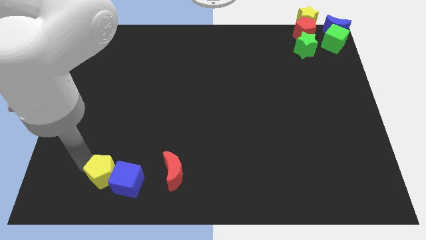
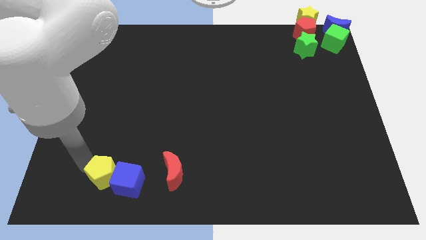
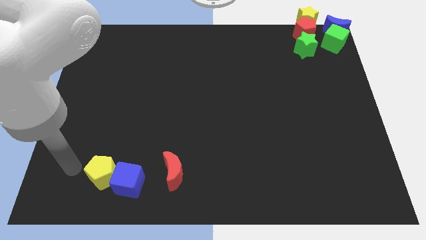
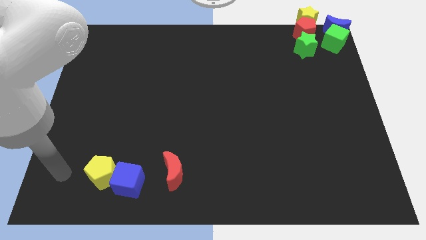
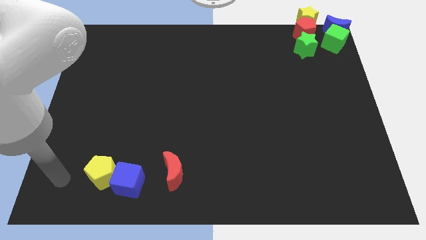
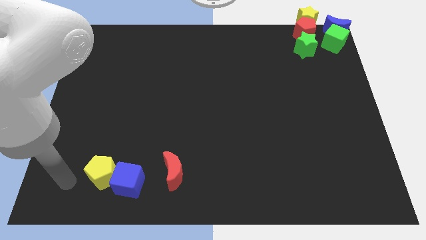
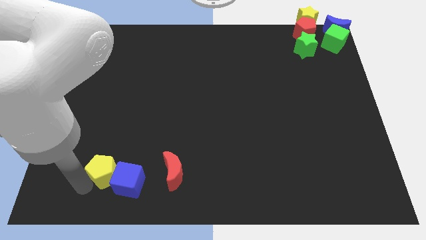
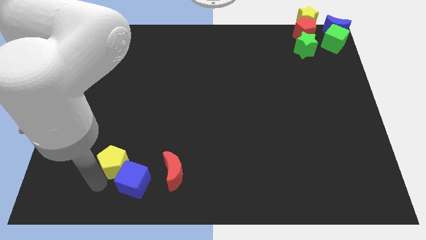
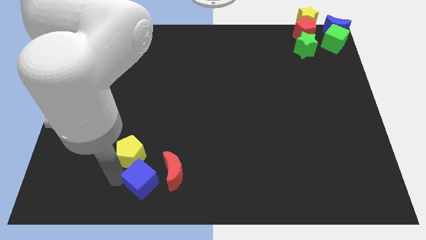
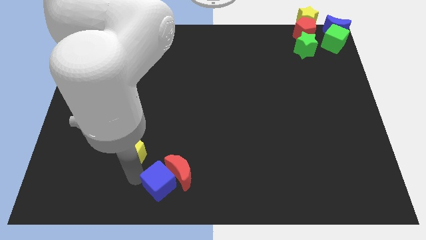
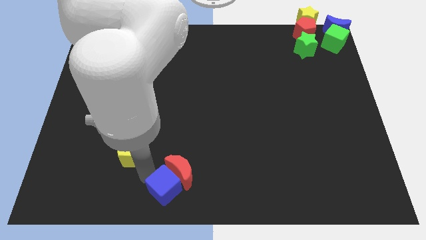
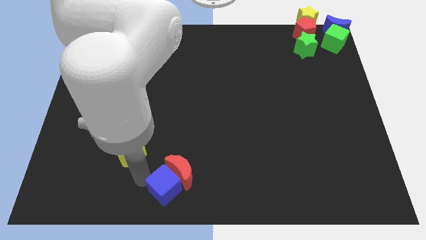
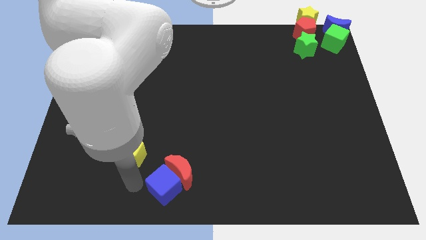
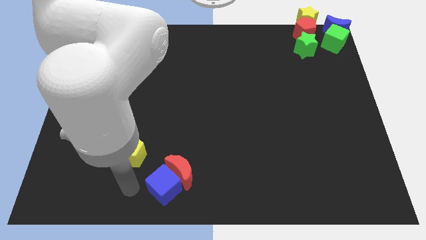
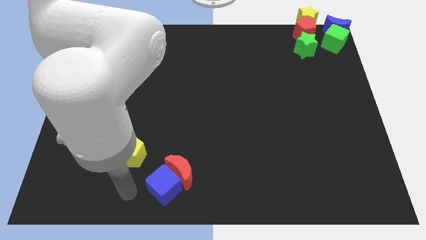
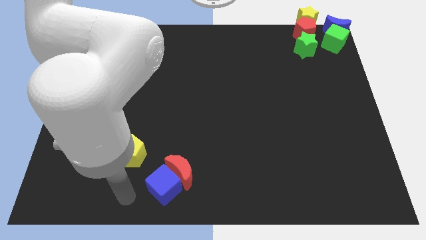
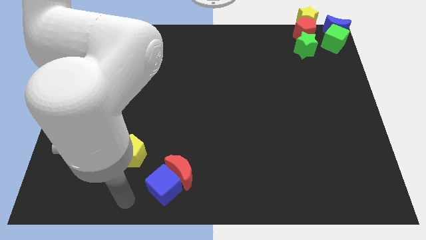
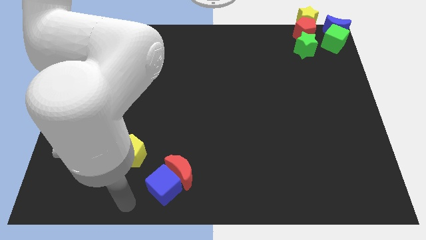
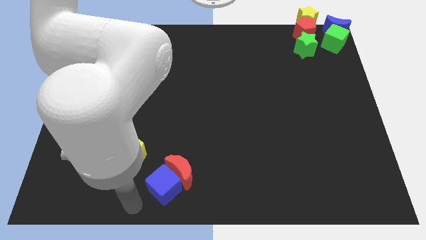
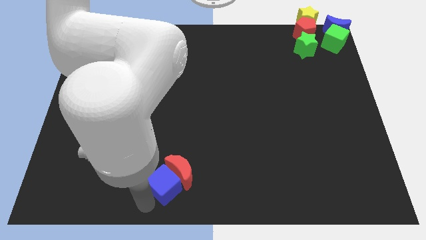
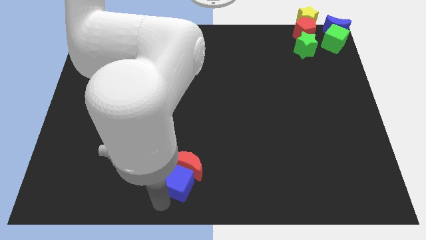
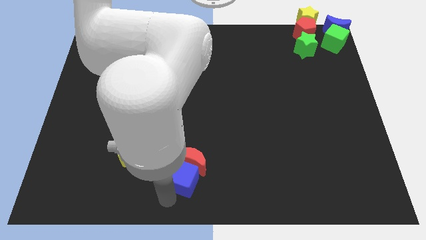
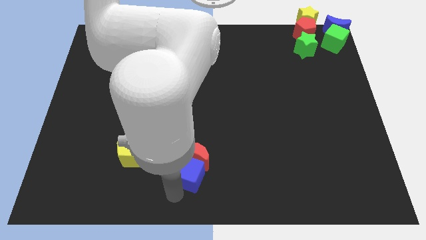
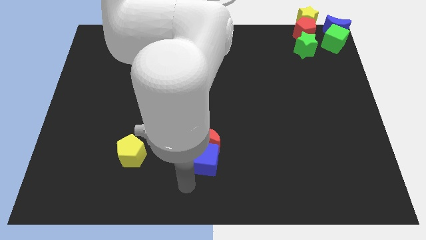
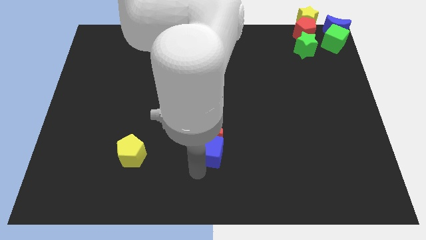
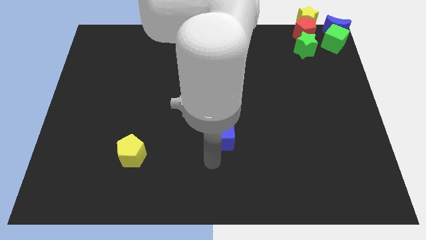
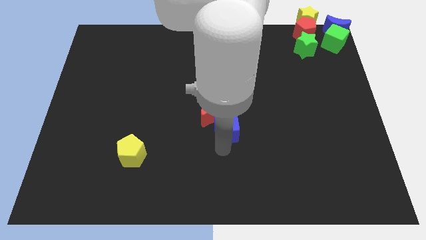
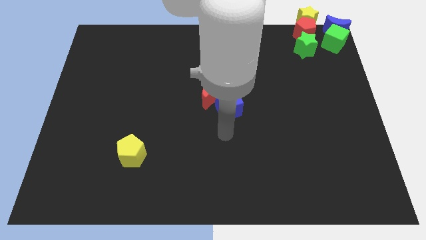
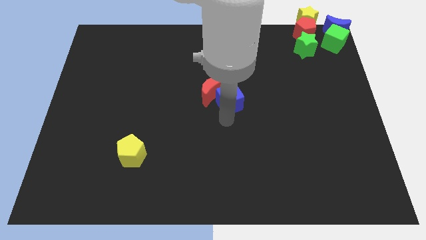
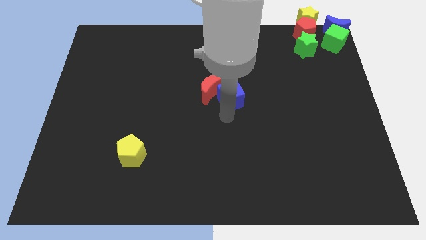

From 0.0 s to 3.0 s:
separate the yellow pentagon and blue cube

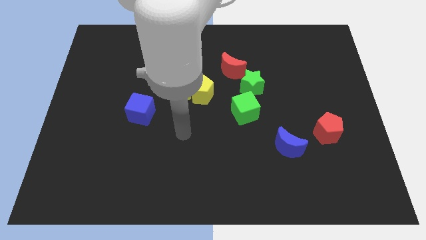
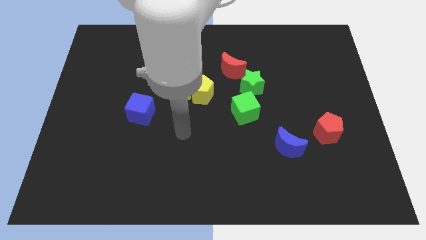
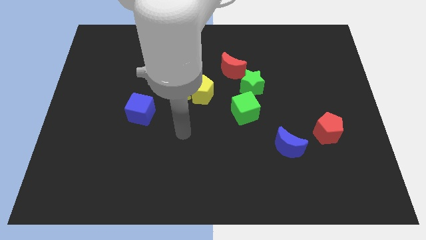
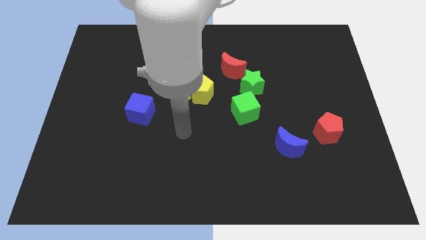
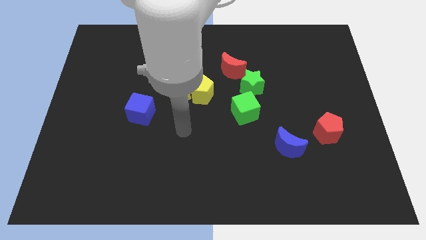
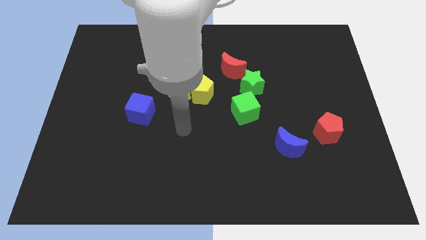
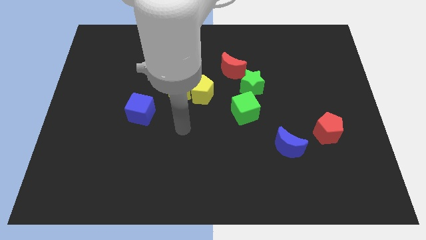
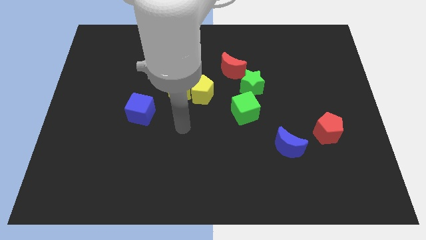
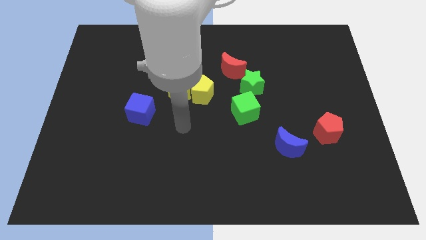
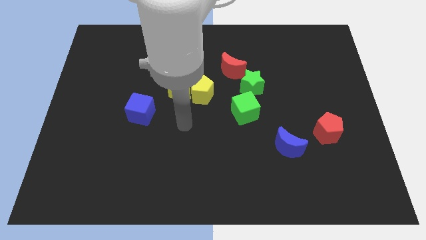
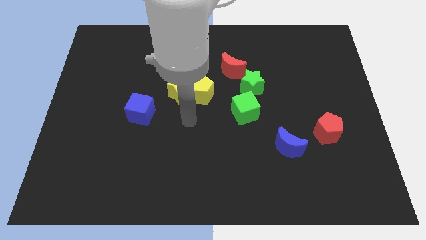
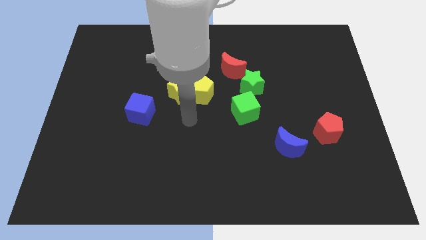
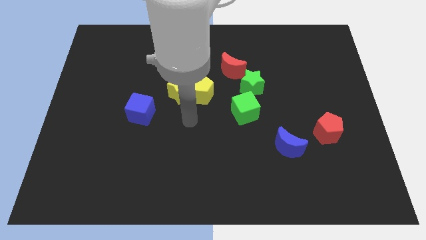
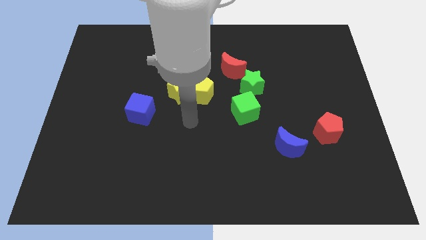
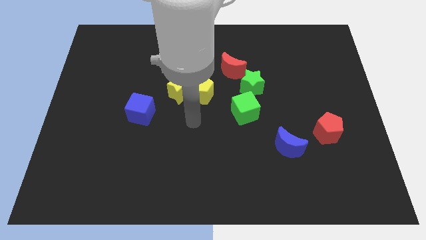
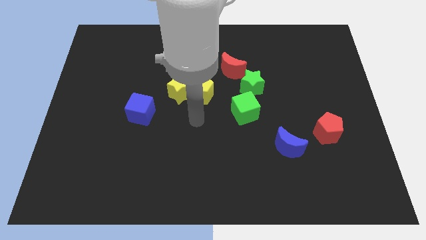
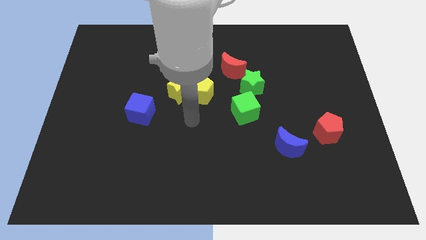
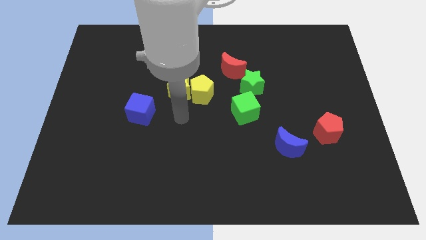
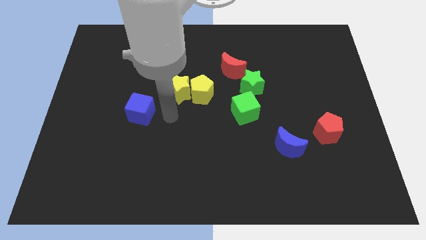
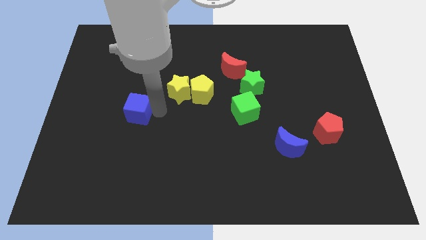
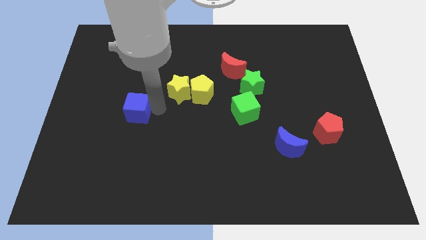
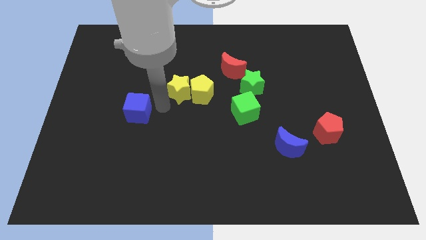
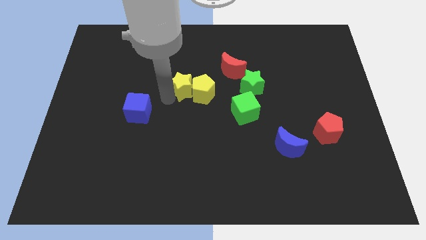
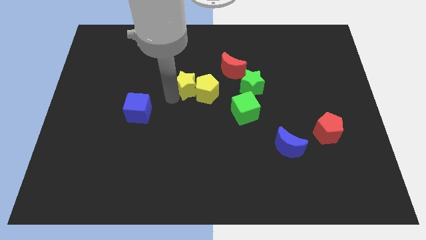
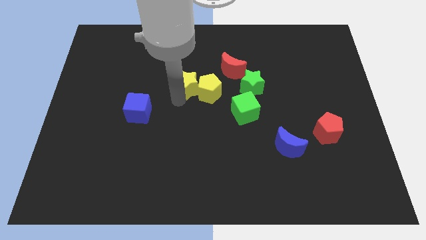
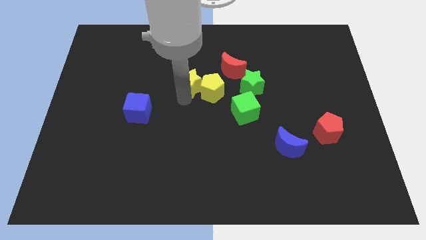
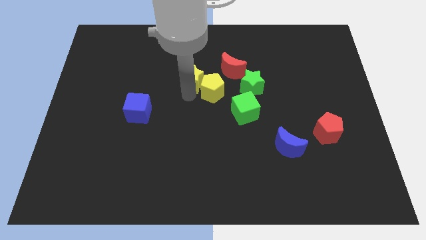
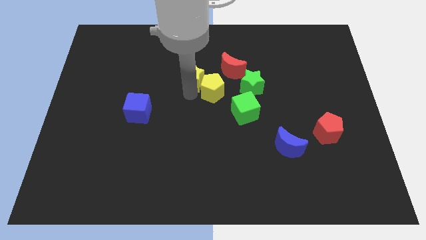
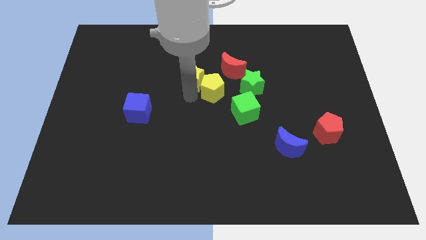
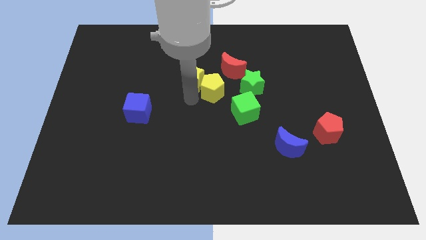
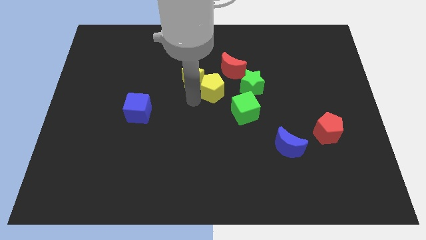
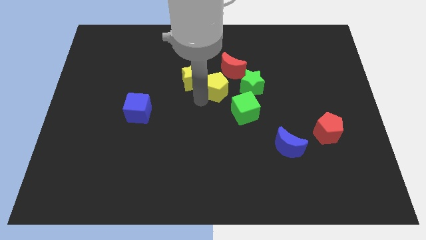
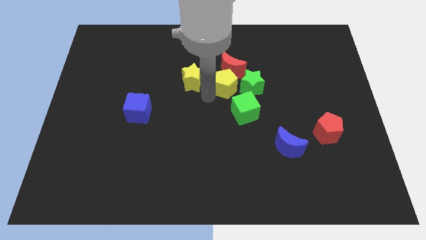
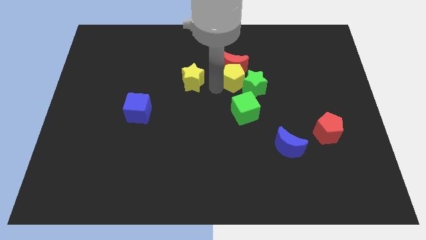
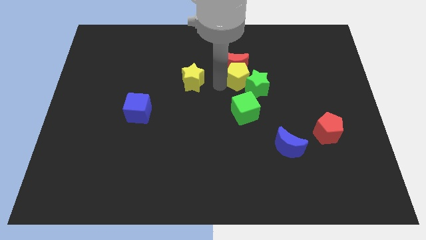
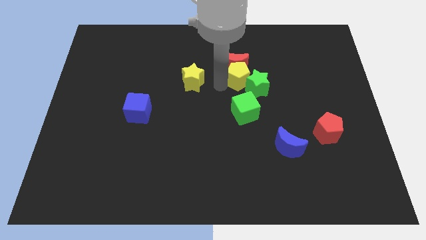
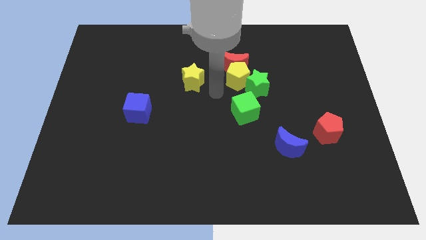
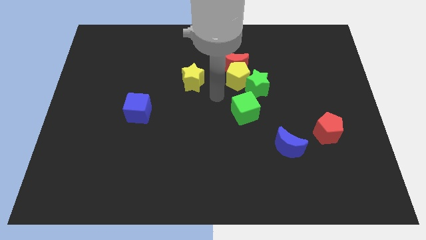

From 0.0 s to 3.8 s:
push the yellow pentagon into red crescent

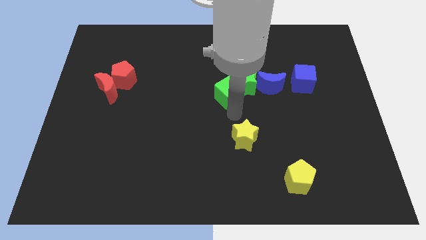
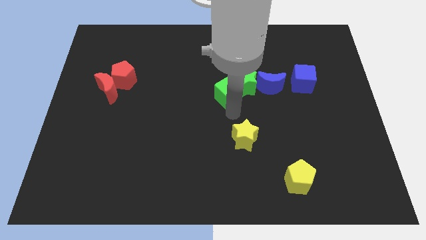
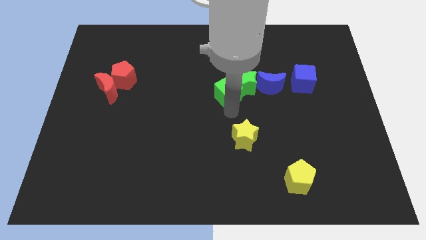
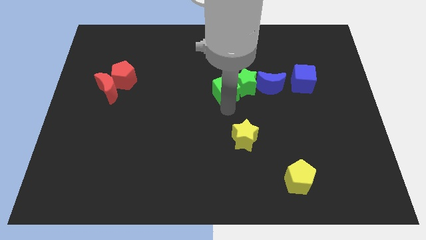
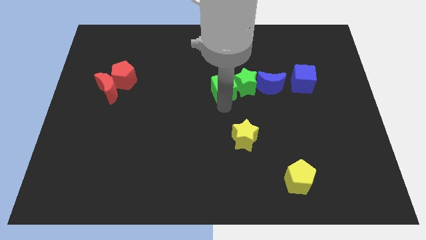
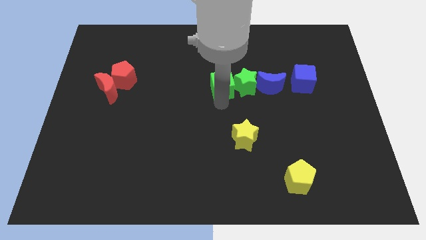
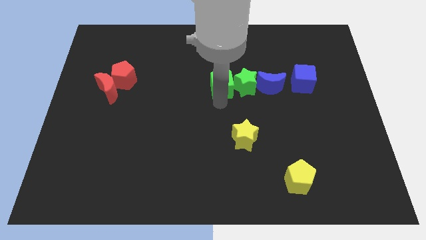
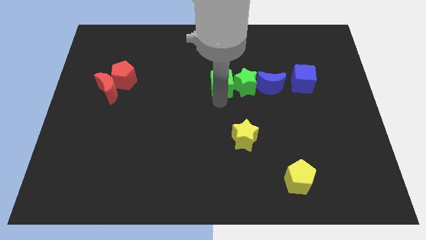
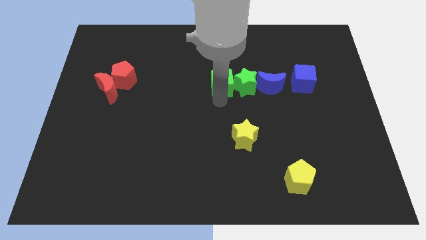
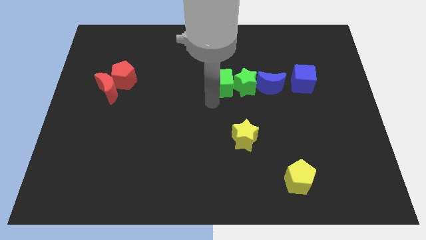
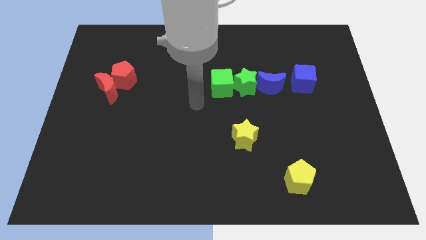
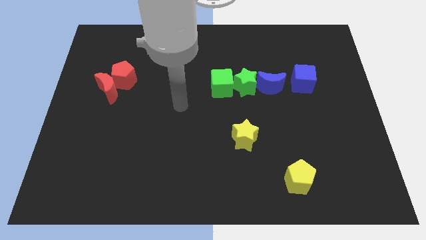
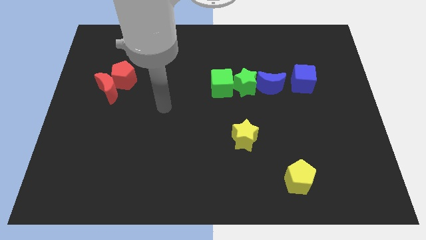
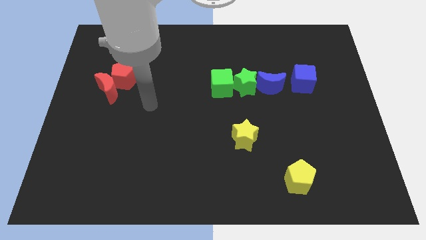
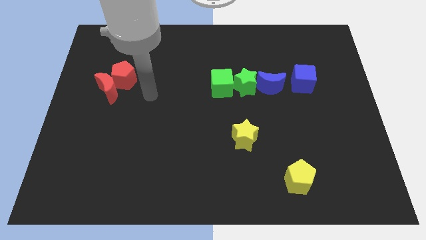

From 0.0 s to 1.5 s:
place the green cube to the left side of the green star

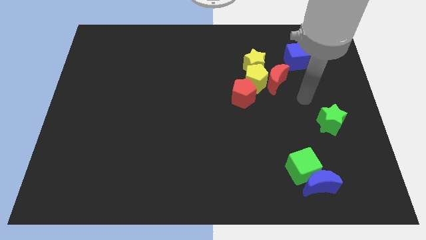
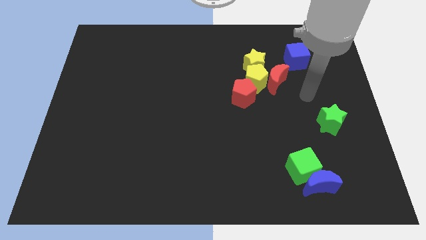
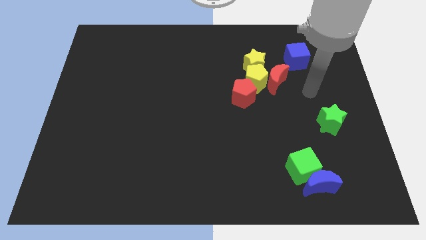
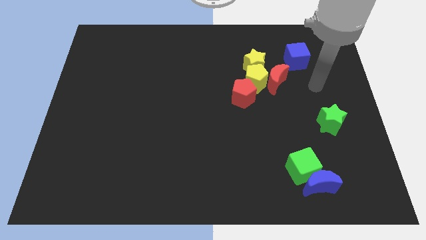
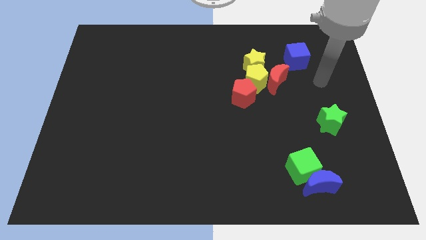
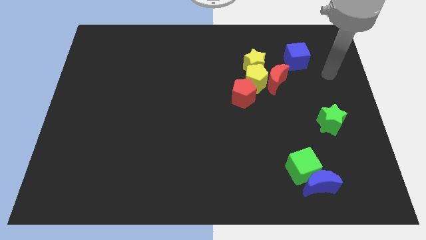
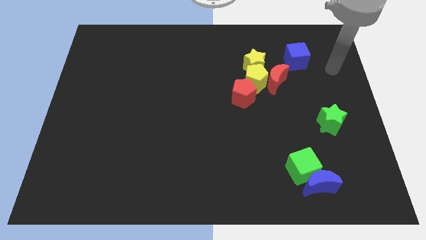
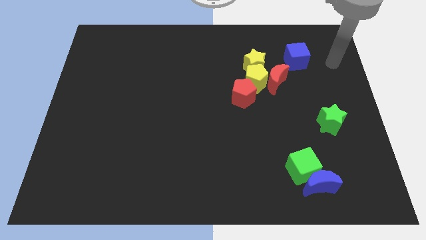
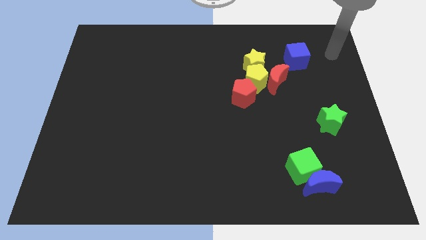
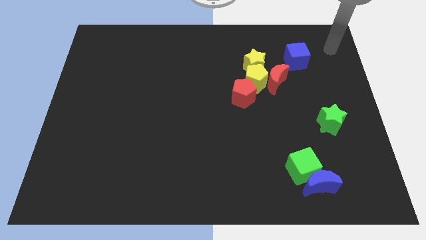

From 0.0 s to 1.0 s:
place your arm to the right of the blue cube
